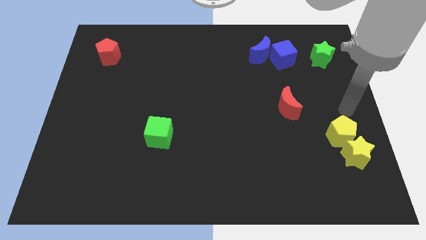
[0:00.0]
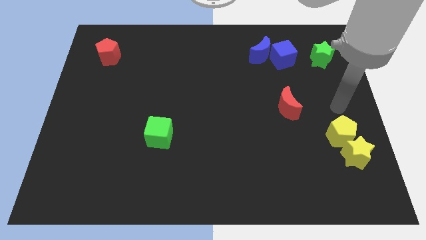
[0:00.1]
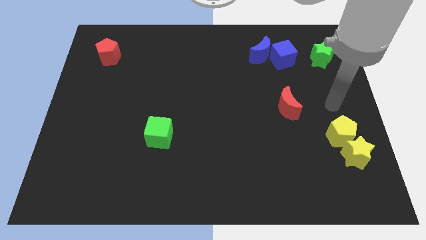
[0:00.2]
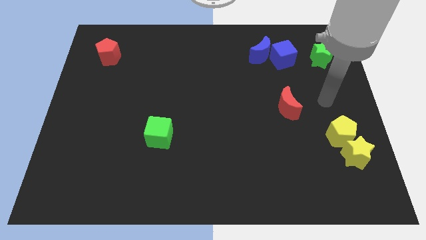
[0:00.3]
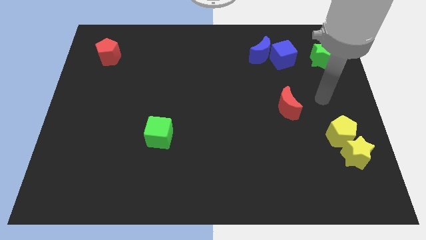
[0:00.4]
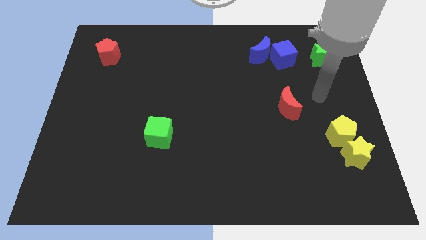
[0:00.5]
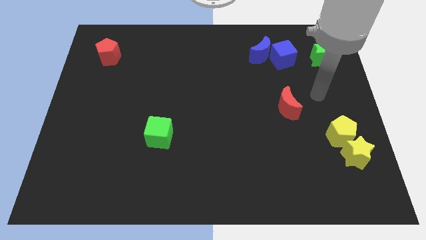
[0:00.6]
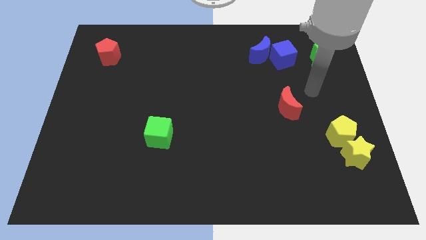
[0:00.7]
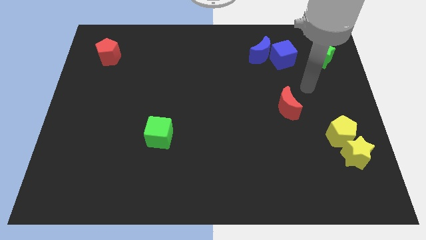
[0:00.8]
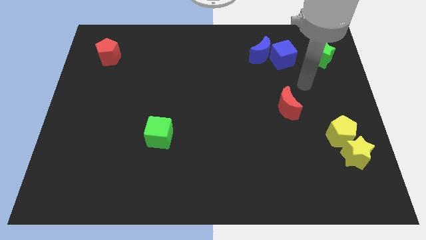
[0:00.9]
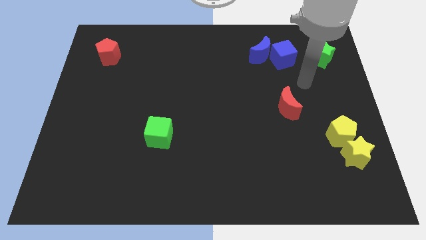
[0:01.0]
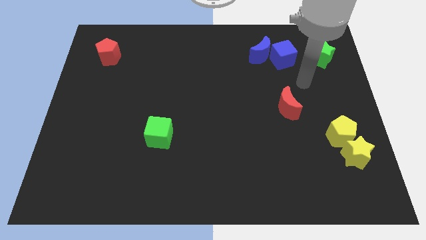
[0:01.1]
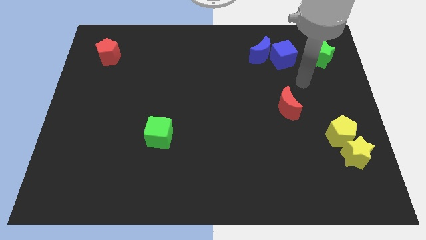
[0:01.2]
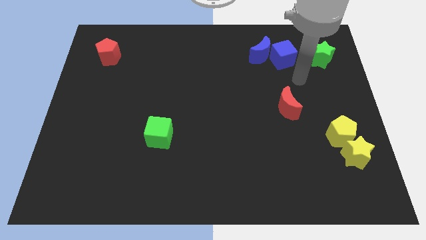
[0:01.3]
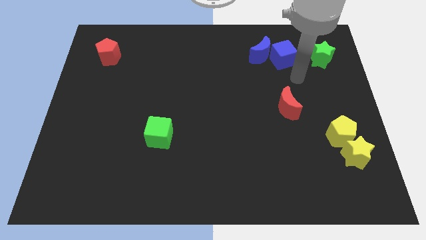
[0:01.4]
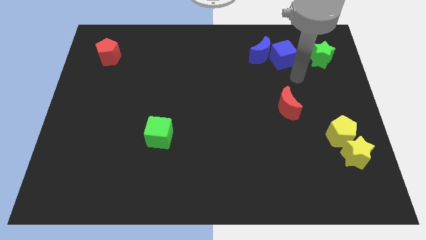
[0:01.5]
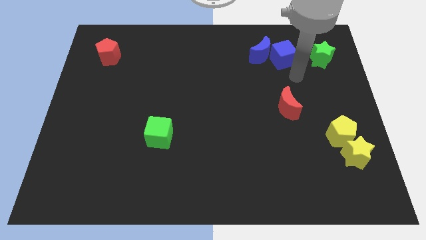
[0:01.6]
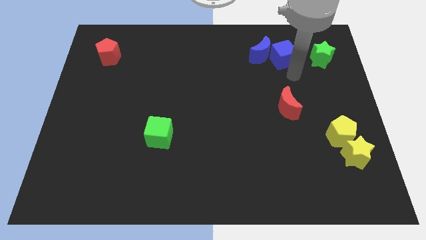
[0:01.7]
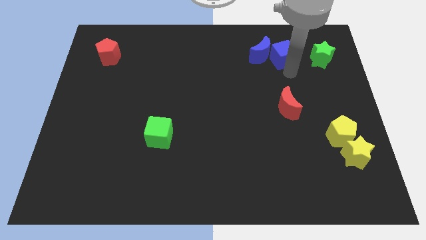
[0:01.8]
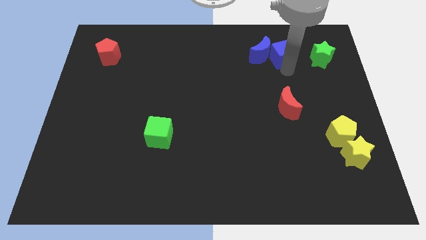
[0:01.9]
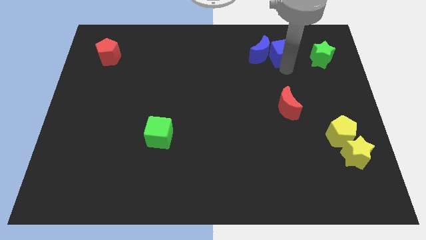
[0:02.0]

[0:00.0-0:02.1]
tap the blue cube

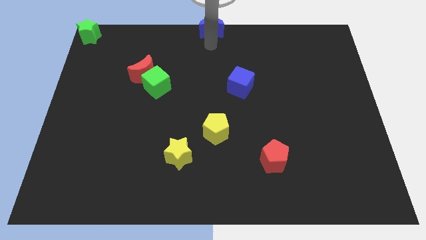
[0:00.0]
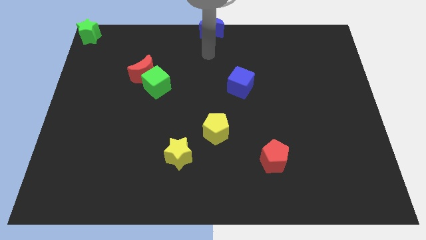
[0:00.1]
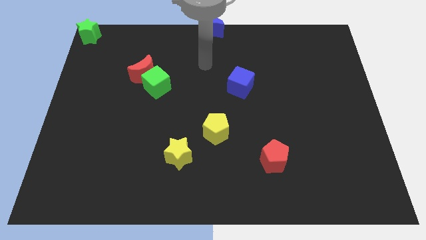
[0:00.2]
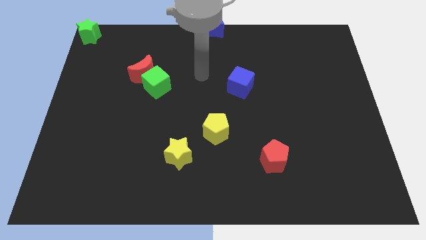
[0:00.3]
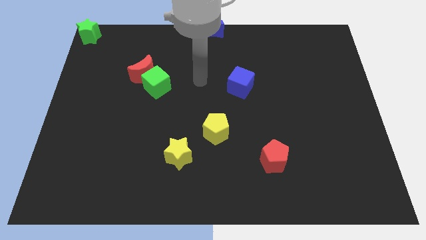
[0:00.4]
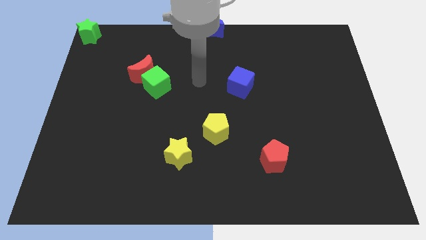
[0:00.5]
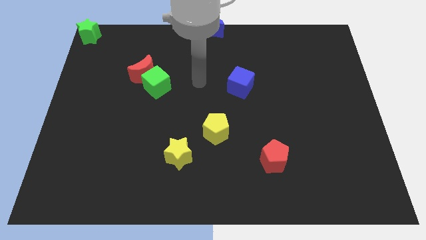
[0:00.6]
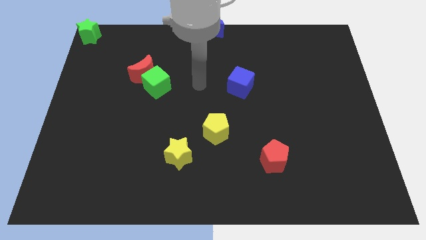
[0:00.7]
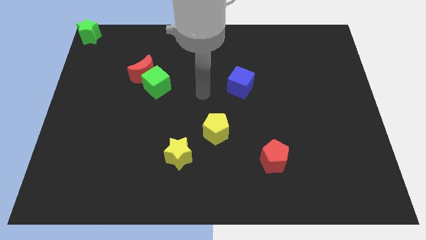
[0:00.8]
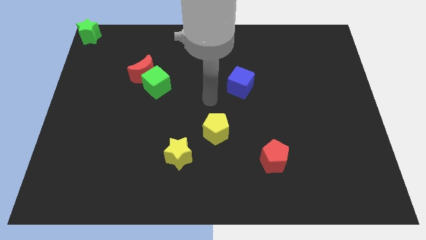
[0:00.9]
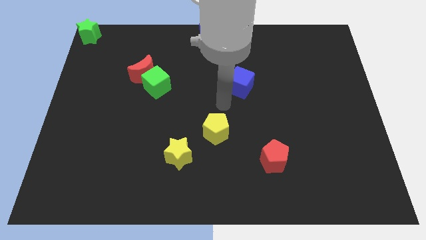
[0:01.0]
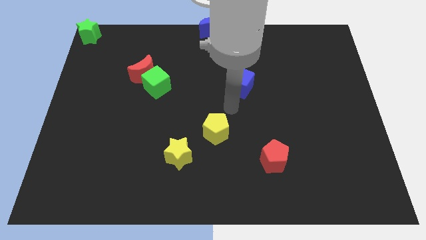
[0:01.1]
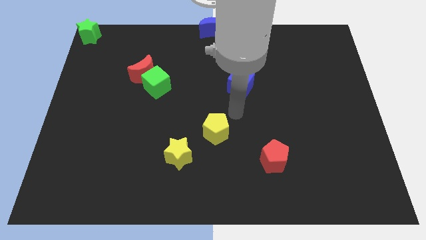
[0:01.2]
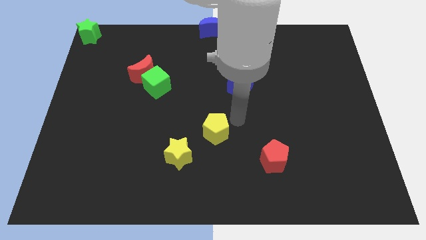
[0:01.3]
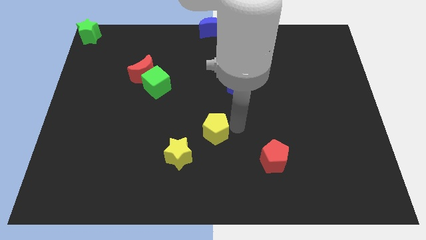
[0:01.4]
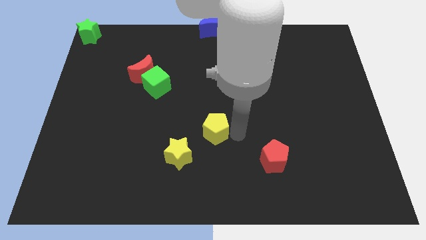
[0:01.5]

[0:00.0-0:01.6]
move yourself close to the right side of the yellow pentagon

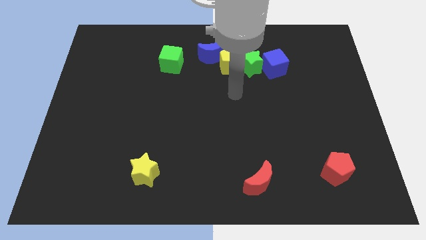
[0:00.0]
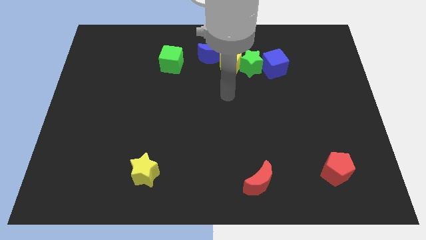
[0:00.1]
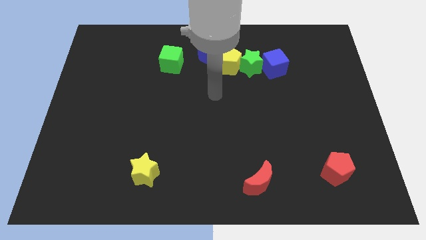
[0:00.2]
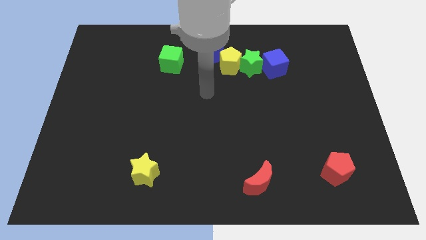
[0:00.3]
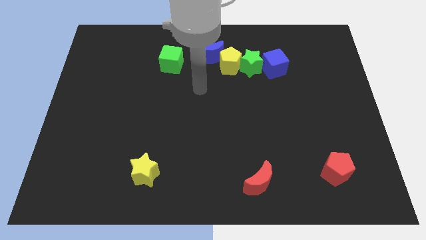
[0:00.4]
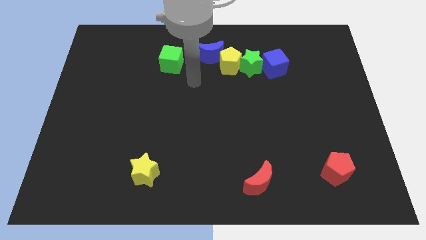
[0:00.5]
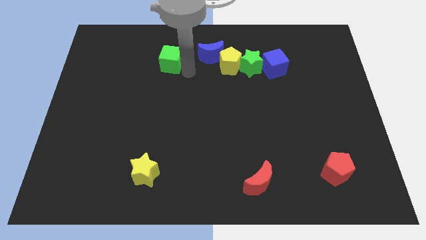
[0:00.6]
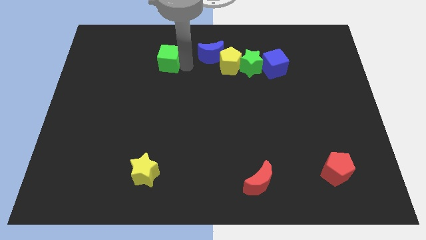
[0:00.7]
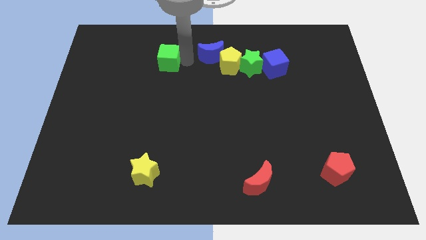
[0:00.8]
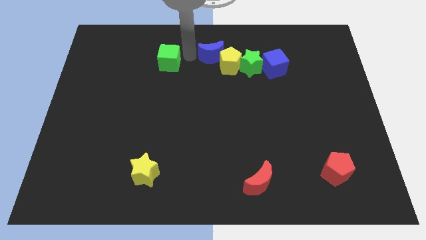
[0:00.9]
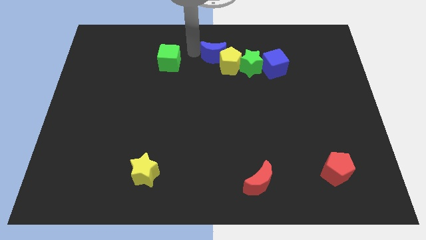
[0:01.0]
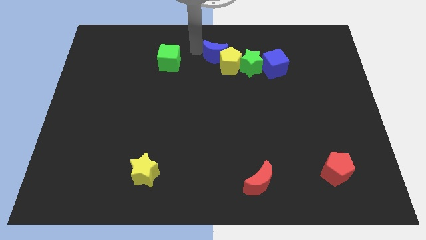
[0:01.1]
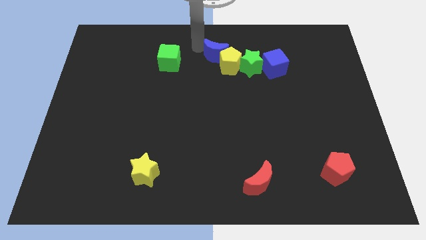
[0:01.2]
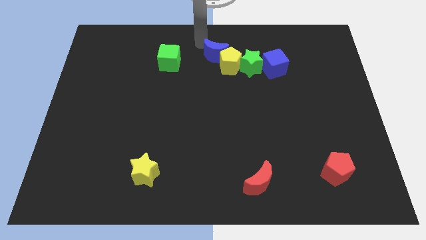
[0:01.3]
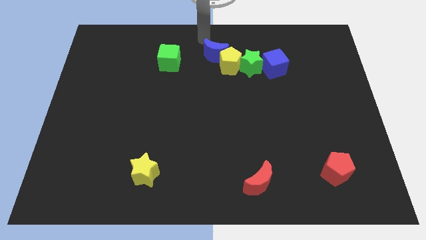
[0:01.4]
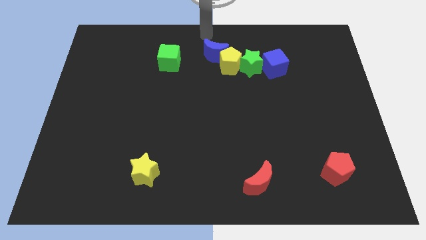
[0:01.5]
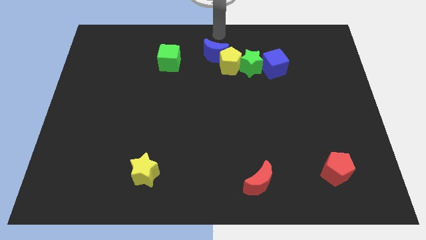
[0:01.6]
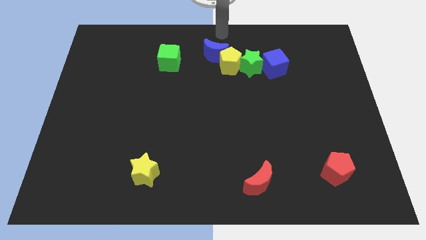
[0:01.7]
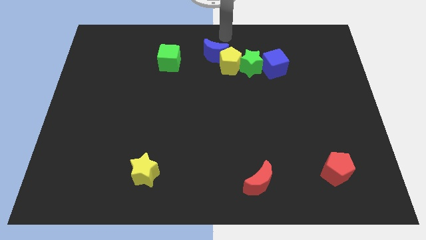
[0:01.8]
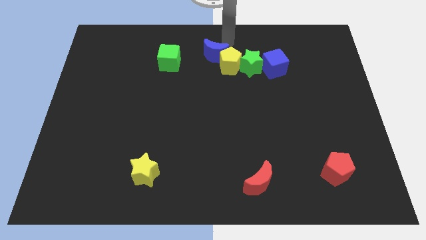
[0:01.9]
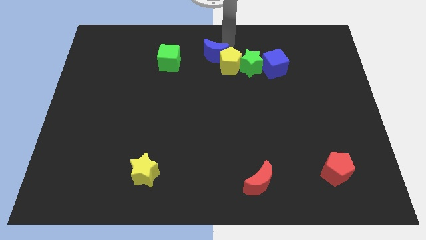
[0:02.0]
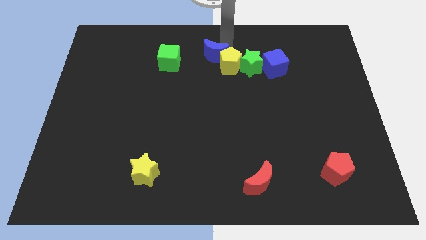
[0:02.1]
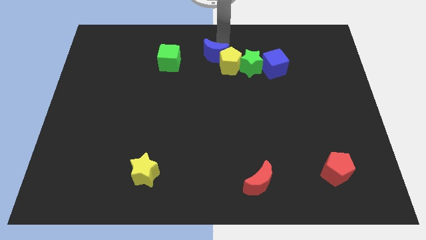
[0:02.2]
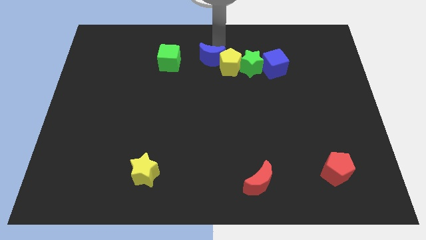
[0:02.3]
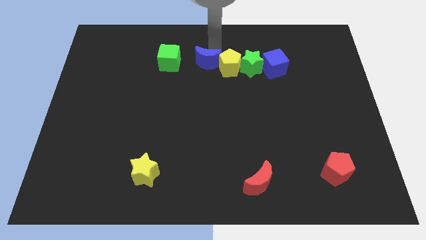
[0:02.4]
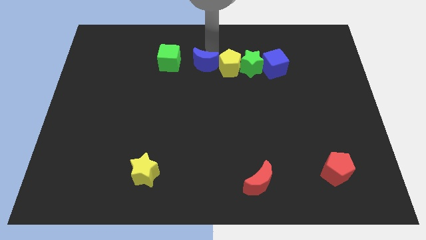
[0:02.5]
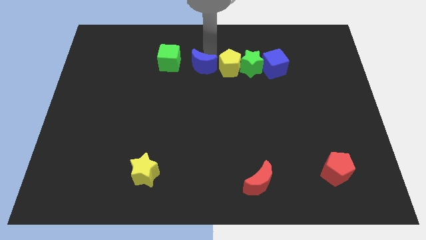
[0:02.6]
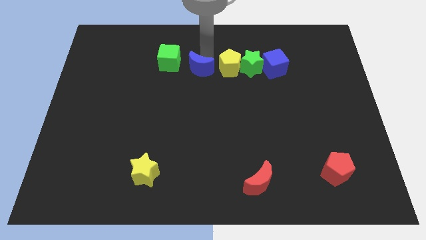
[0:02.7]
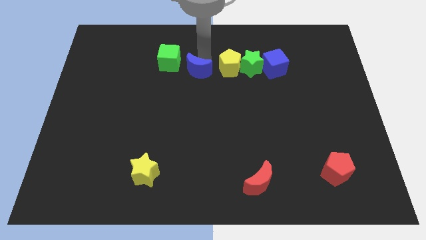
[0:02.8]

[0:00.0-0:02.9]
push the blue crescent left to the yellow pentagon

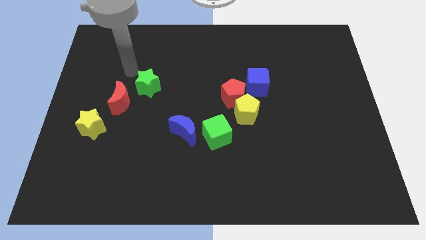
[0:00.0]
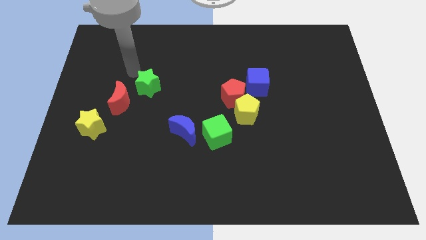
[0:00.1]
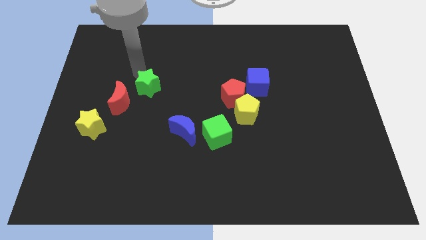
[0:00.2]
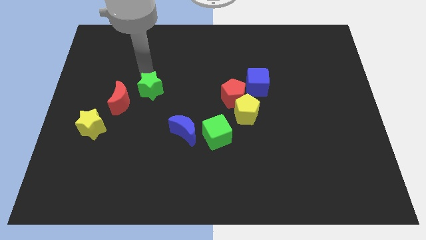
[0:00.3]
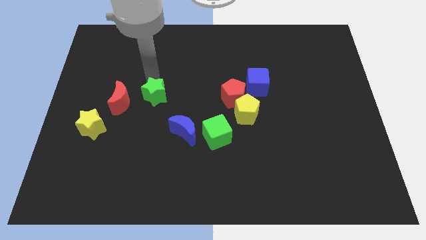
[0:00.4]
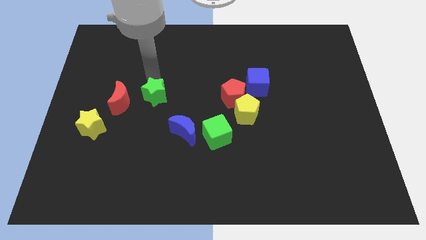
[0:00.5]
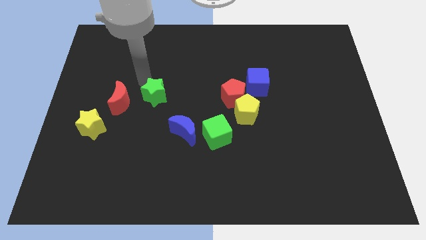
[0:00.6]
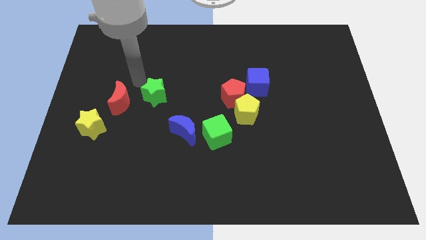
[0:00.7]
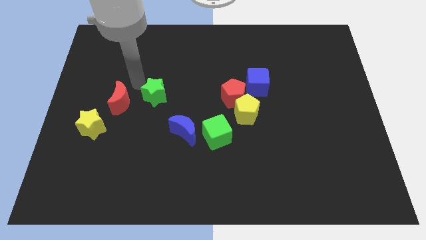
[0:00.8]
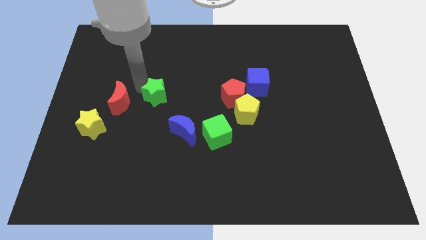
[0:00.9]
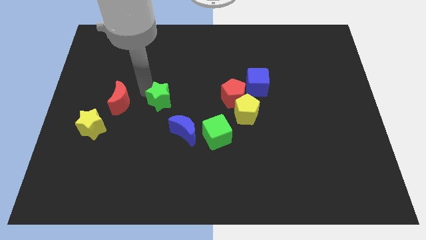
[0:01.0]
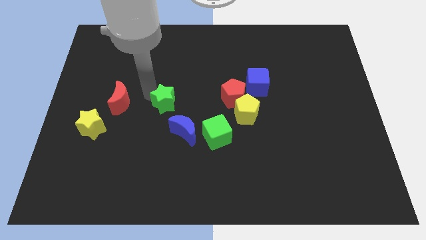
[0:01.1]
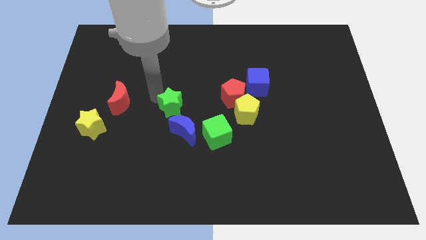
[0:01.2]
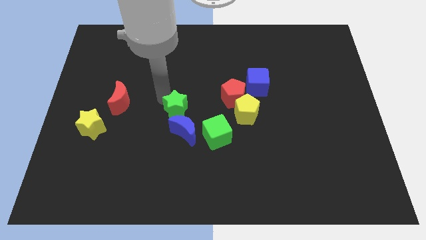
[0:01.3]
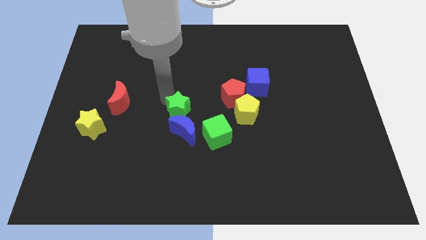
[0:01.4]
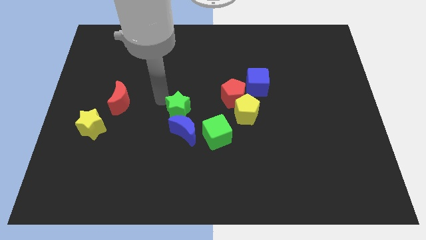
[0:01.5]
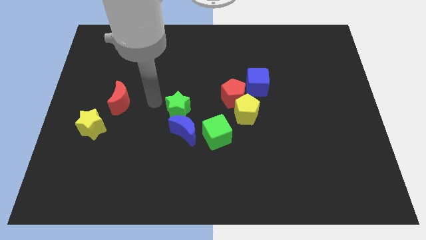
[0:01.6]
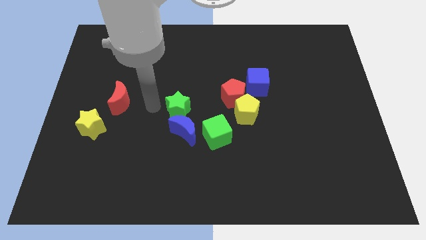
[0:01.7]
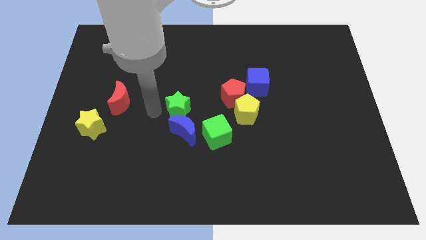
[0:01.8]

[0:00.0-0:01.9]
move the green star above the blue crescent

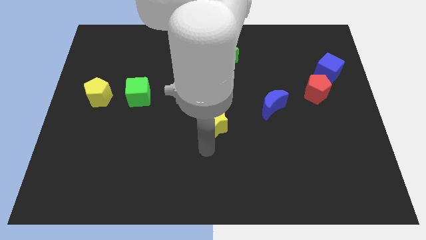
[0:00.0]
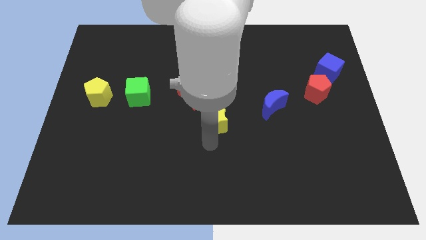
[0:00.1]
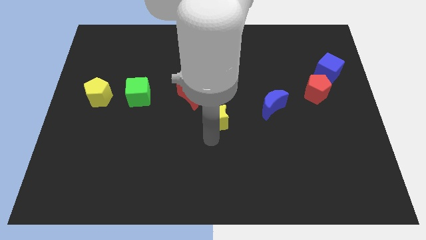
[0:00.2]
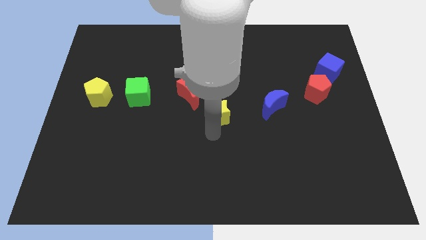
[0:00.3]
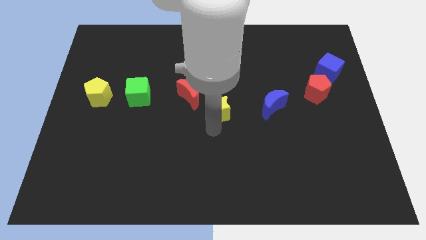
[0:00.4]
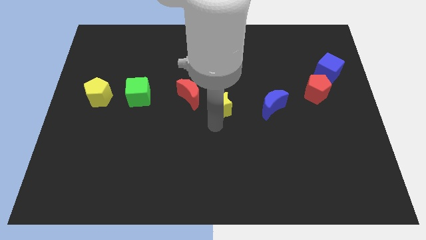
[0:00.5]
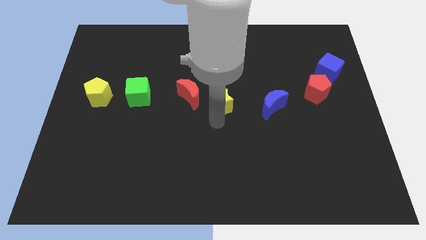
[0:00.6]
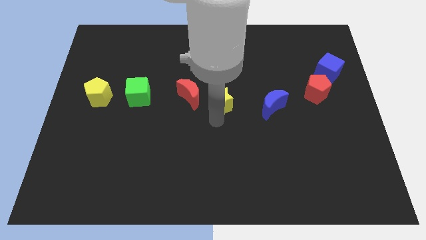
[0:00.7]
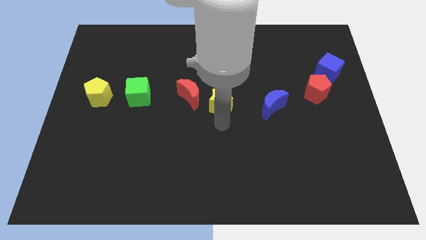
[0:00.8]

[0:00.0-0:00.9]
move yellow star in center of board
